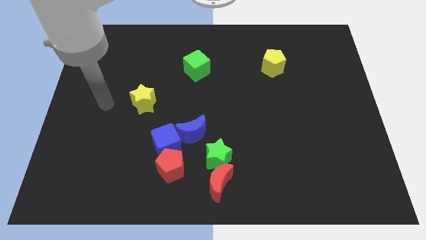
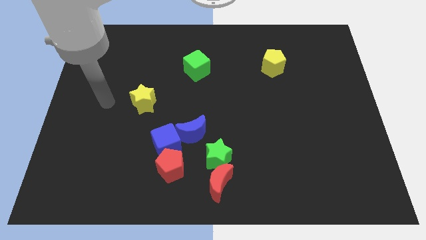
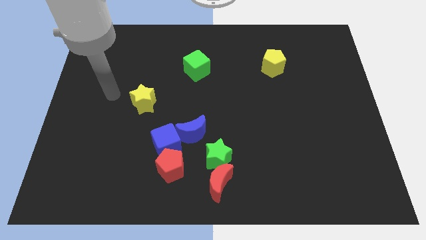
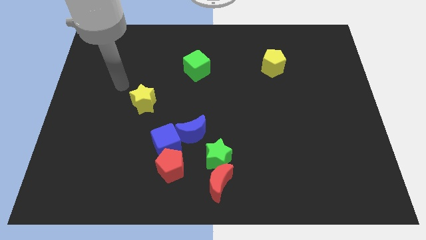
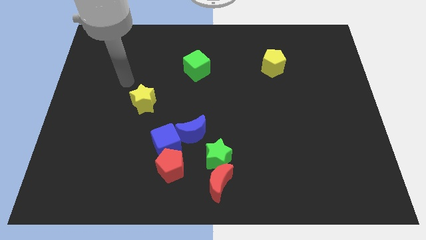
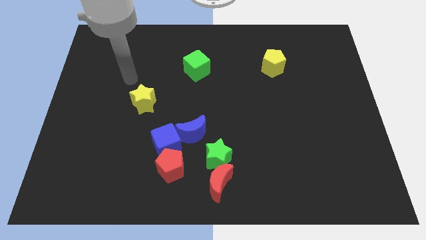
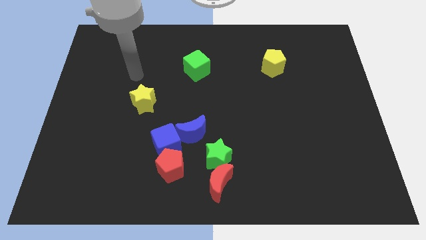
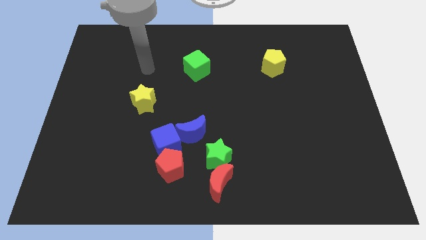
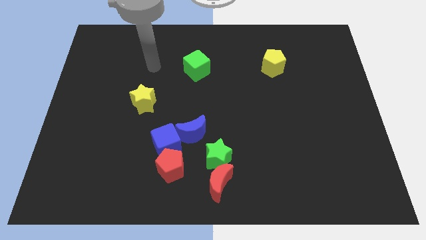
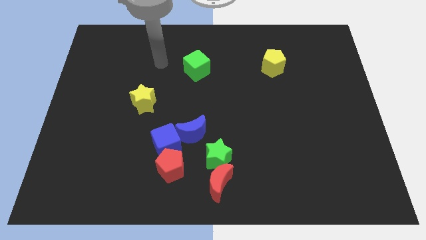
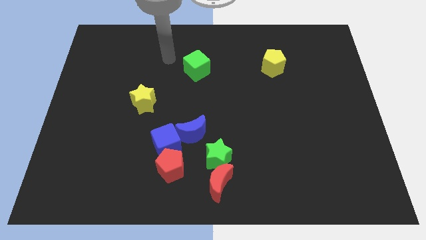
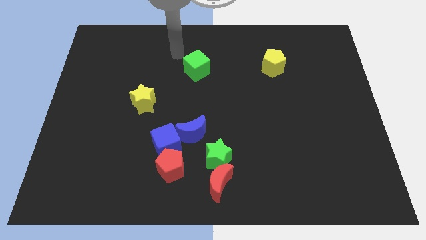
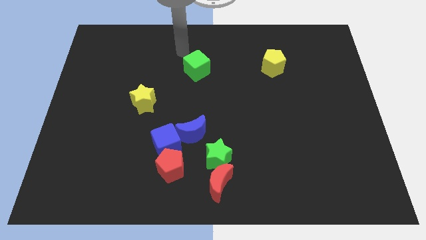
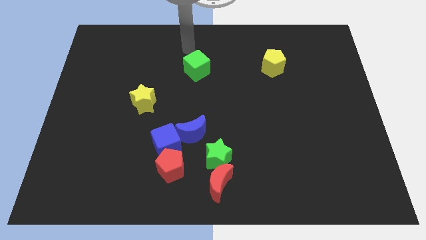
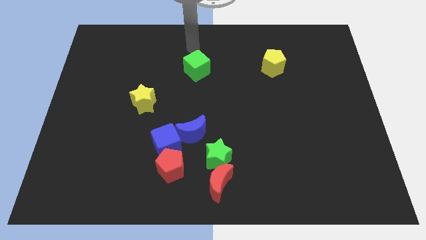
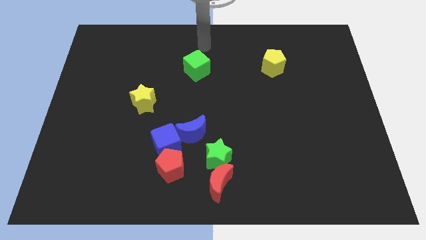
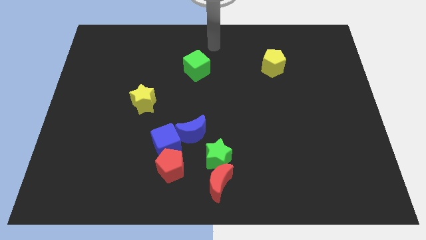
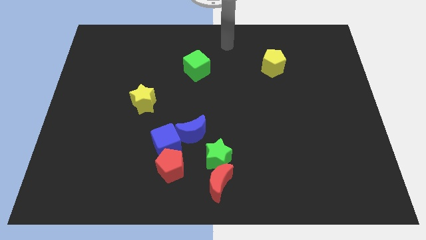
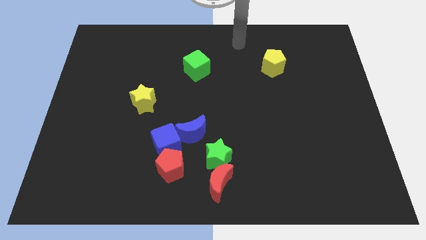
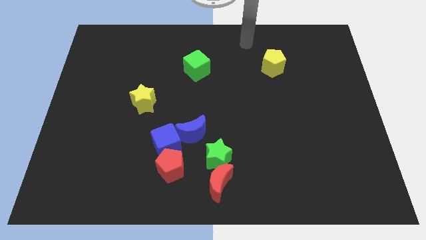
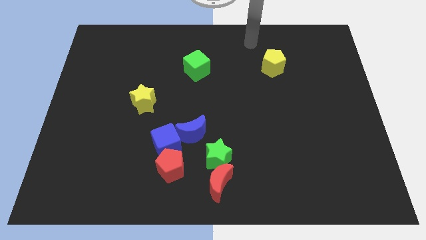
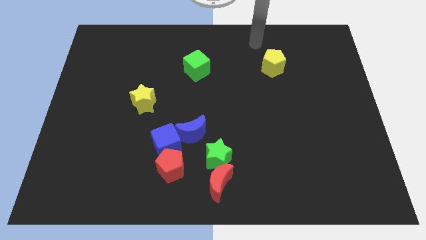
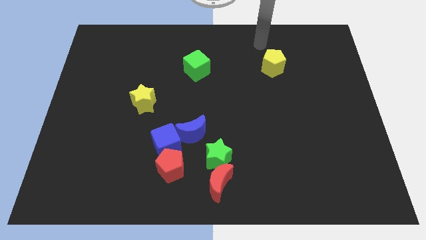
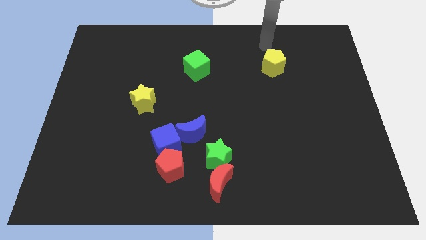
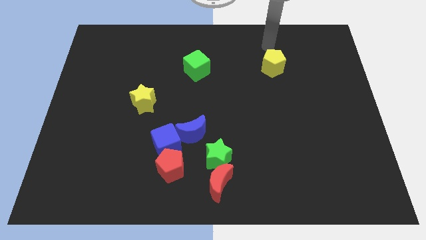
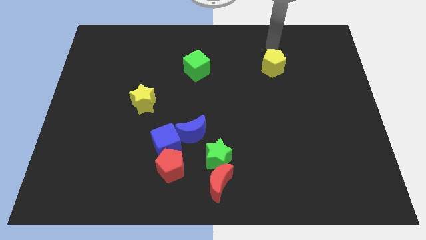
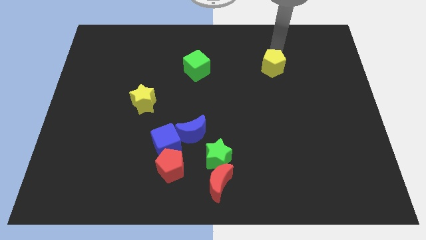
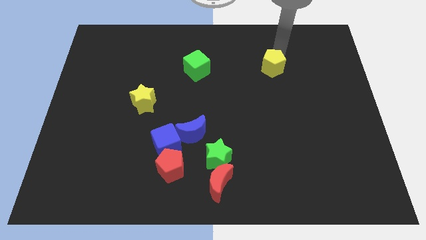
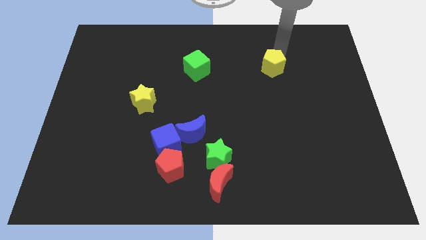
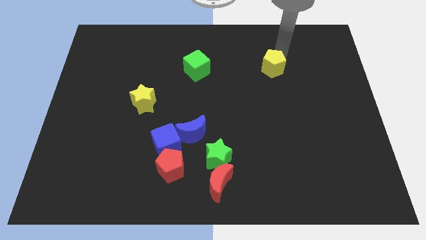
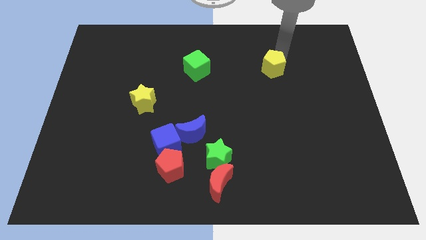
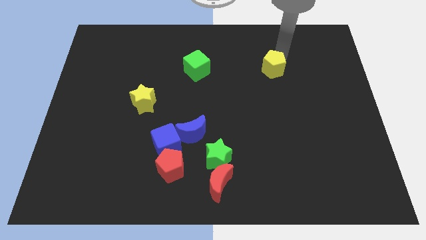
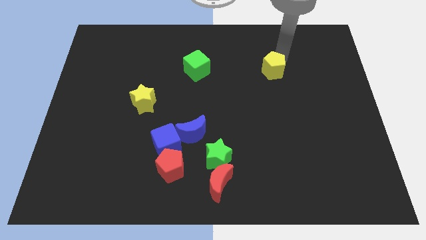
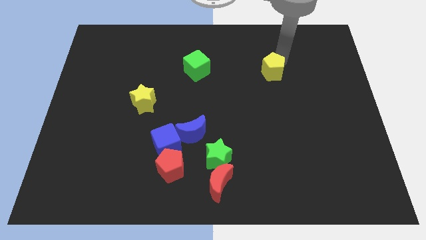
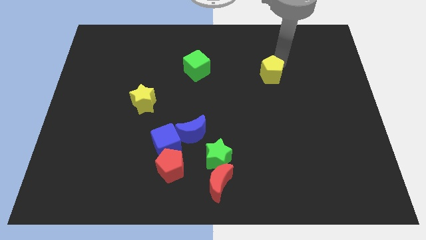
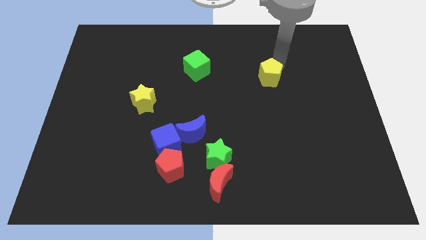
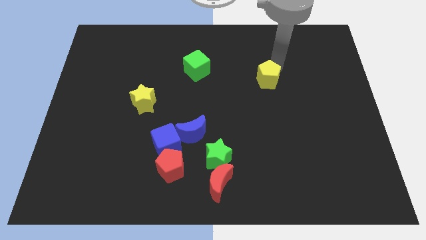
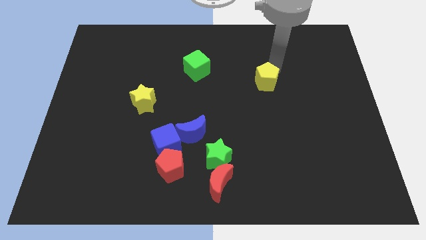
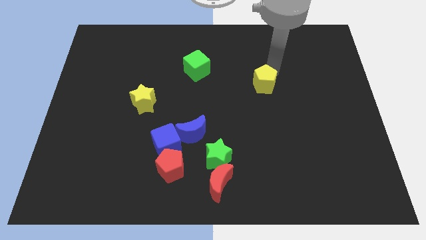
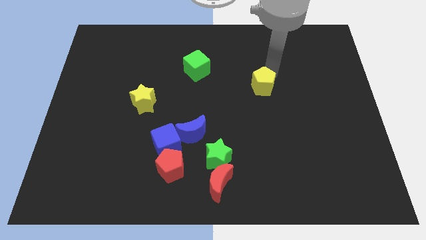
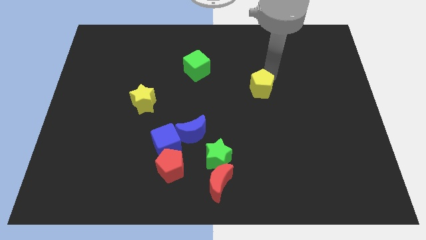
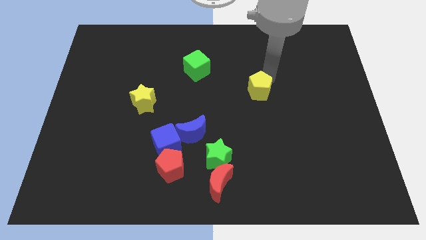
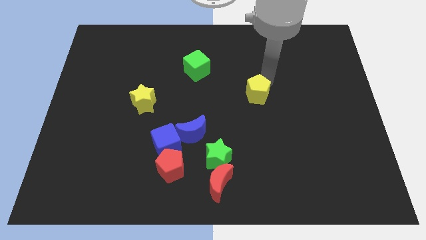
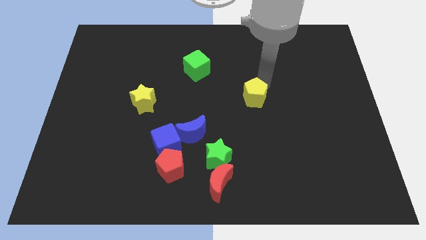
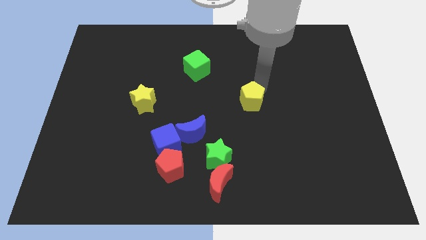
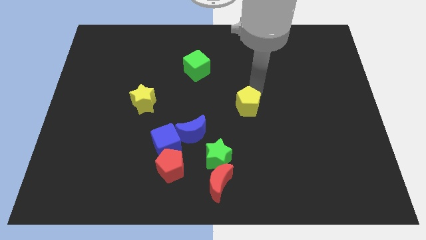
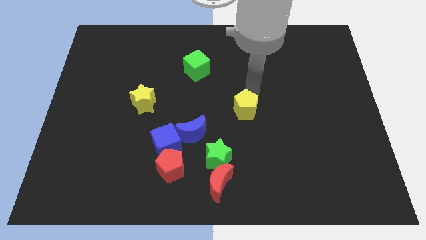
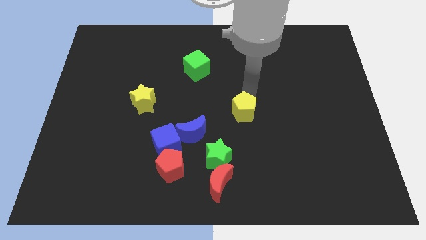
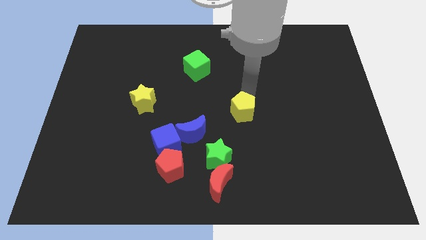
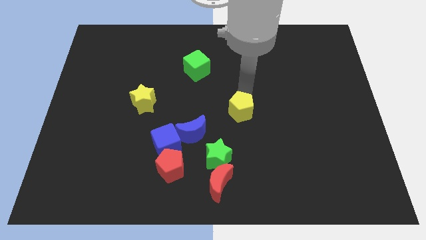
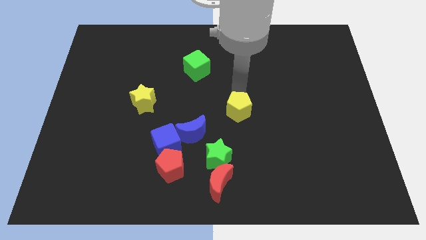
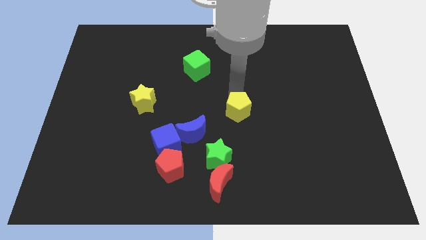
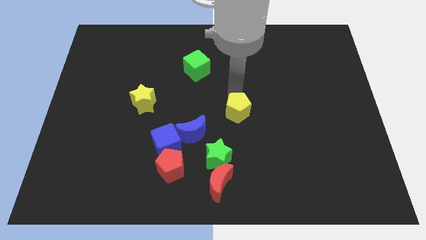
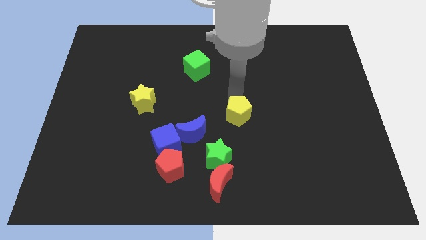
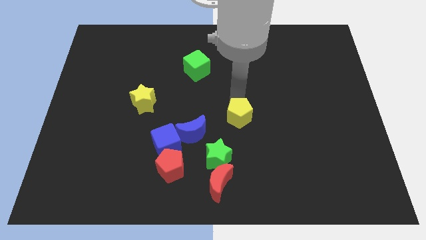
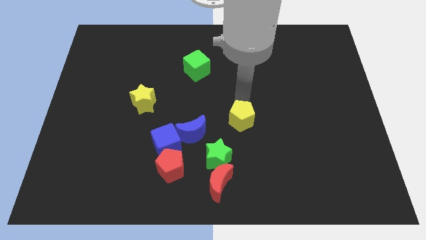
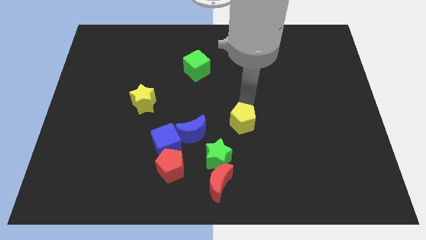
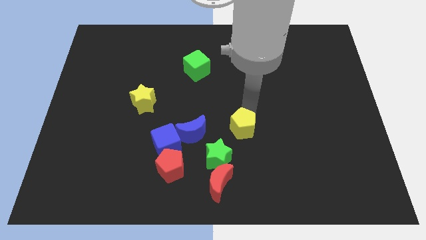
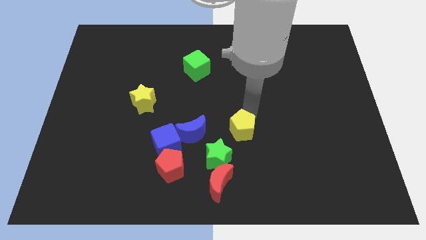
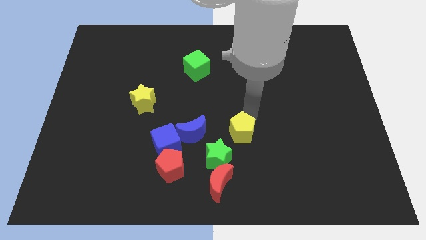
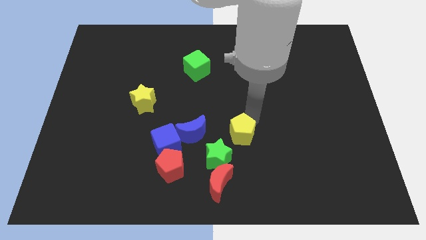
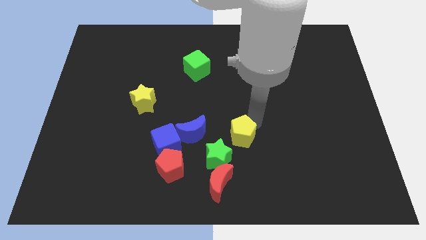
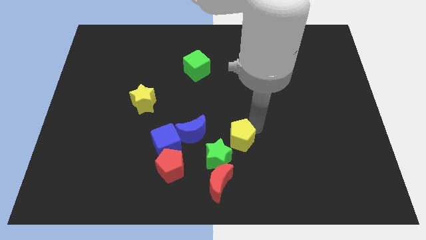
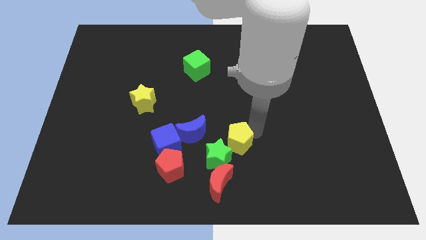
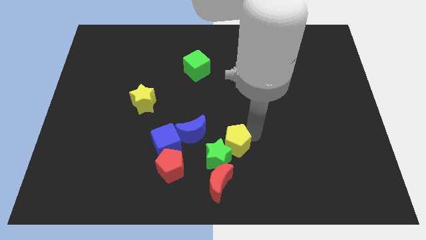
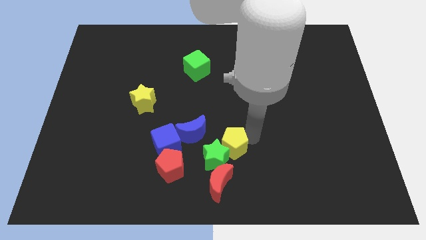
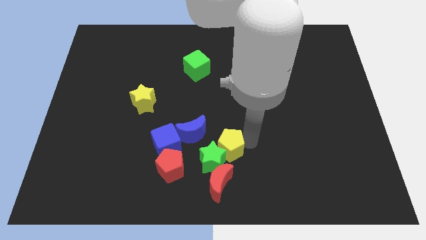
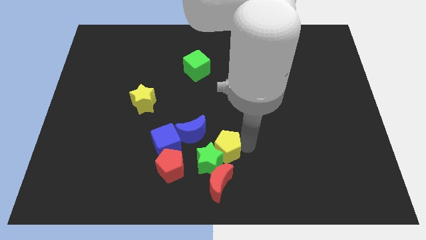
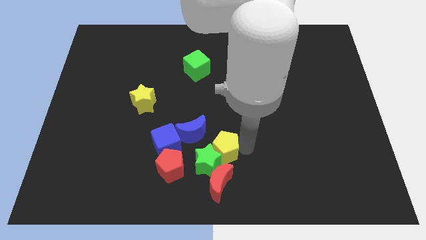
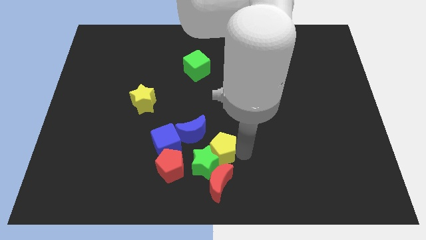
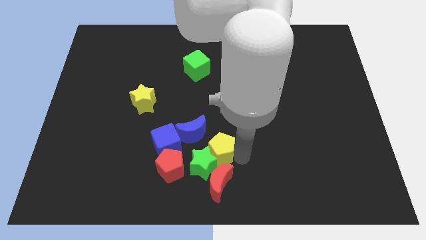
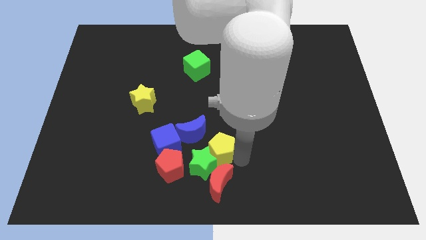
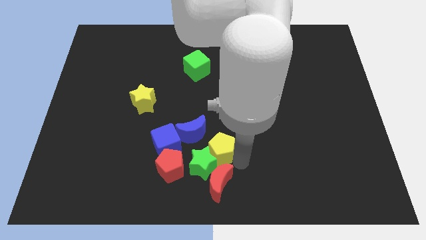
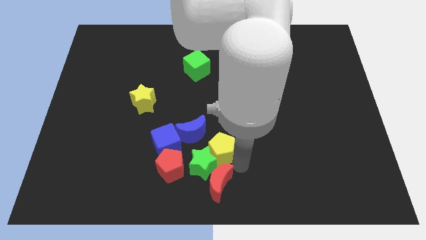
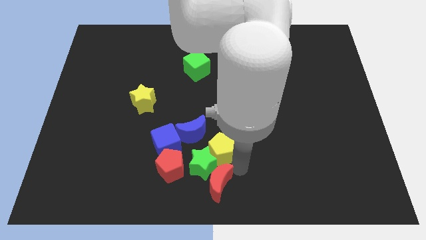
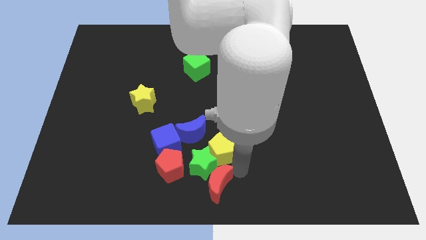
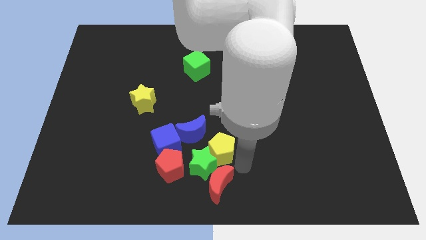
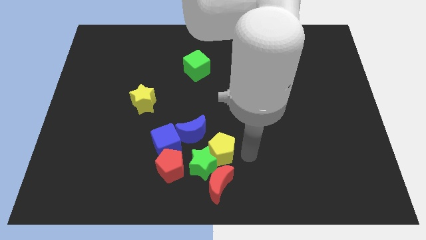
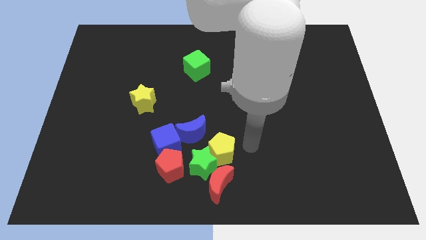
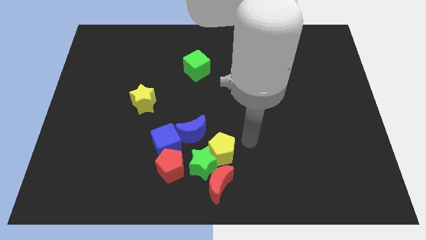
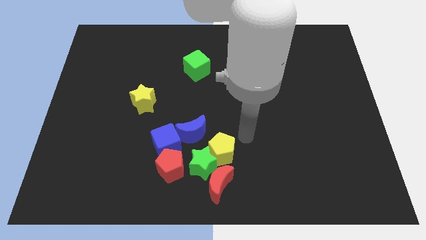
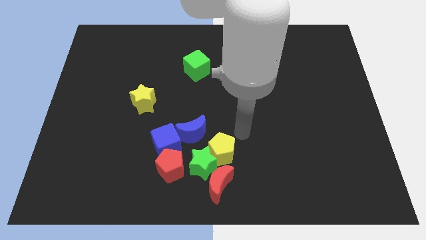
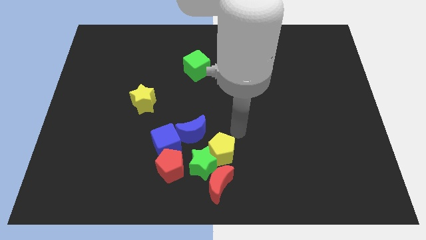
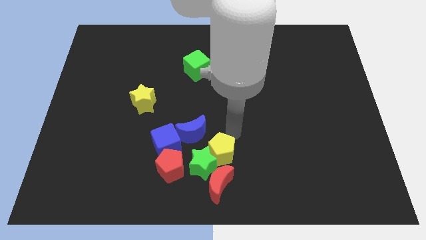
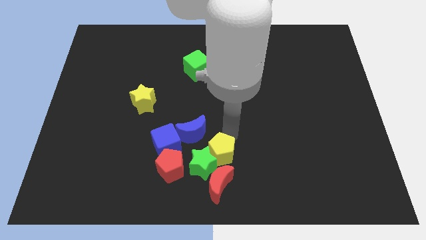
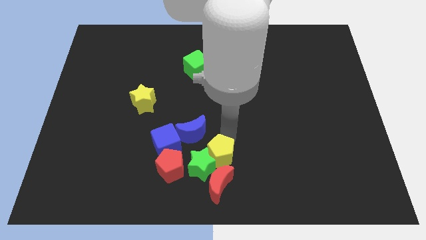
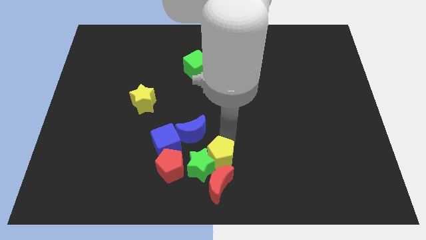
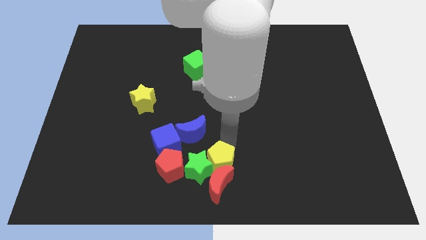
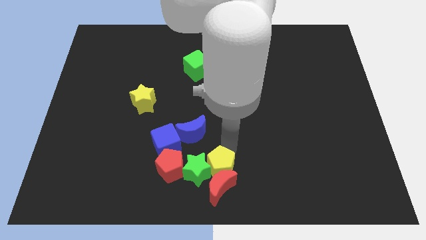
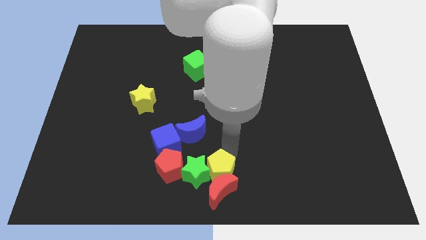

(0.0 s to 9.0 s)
put the yellow pentagon towards the red moon
